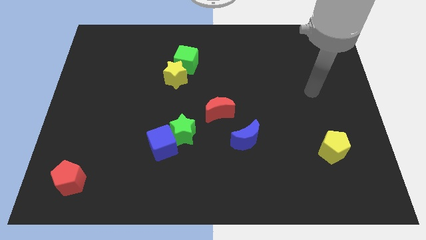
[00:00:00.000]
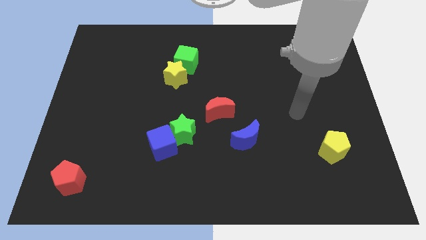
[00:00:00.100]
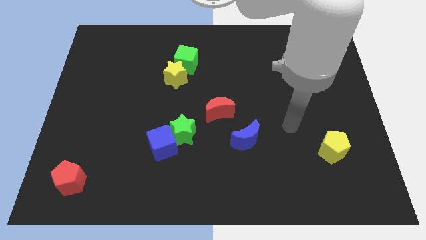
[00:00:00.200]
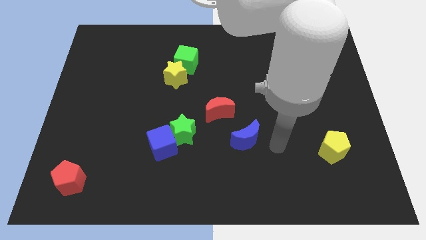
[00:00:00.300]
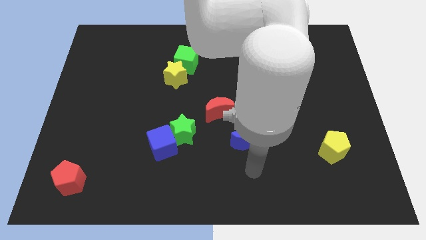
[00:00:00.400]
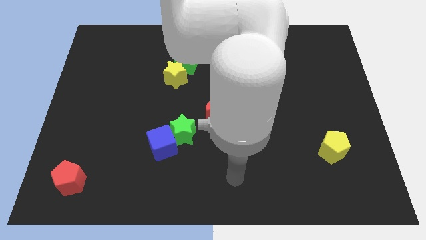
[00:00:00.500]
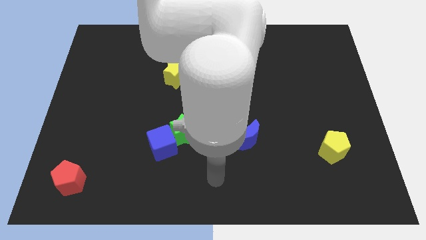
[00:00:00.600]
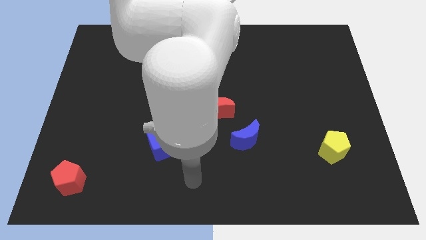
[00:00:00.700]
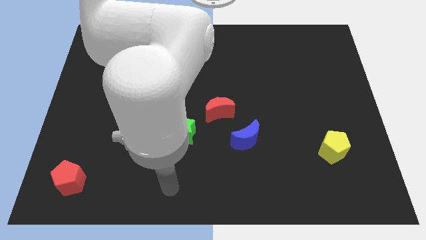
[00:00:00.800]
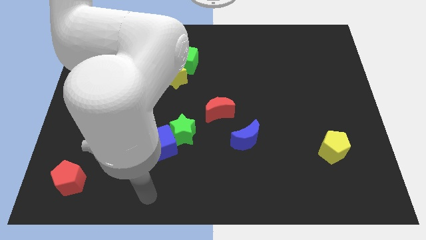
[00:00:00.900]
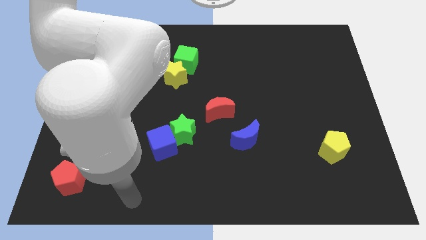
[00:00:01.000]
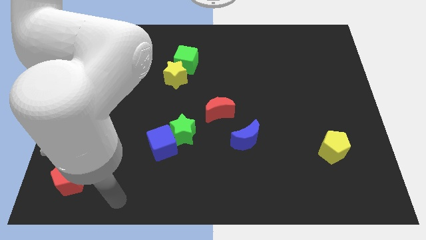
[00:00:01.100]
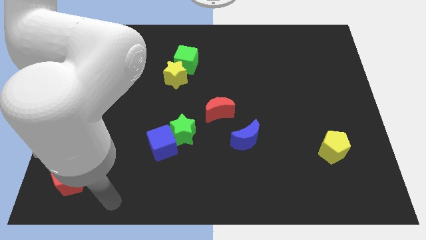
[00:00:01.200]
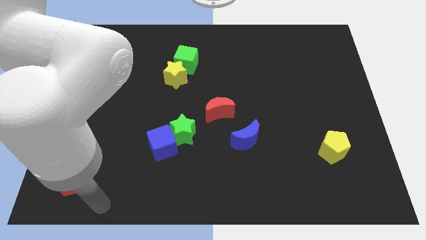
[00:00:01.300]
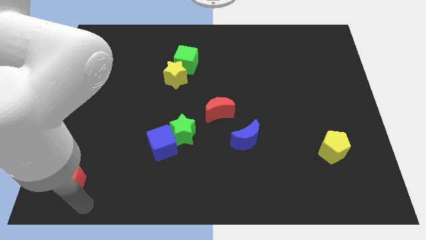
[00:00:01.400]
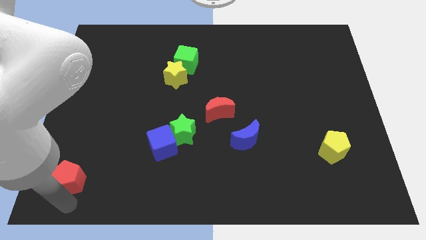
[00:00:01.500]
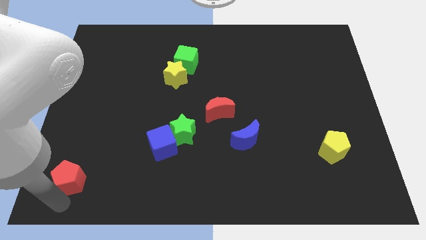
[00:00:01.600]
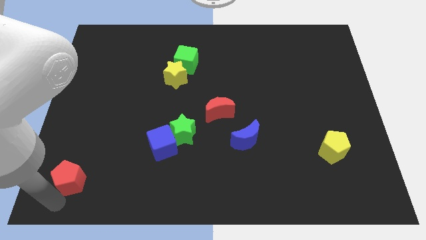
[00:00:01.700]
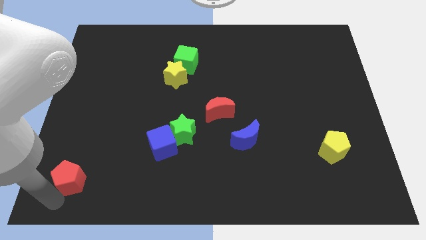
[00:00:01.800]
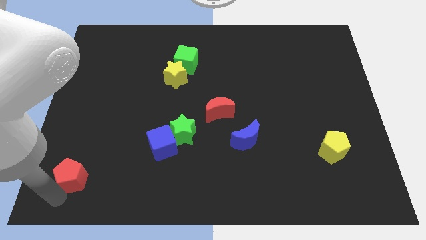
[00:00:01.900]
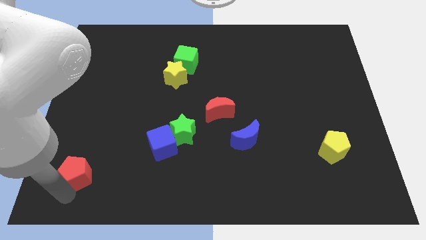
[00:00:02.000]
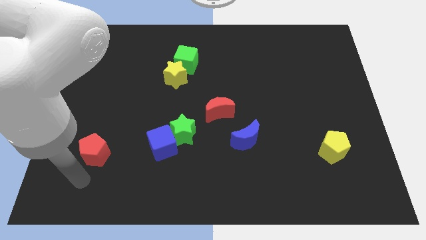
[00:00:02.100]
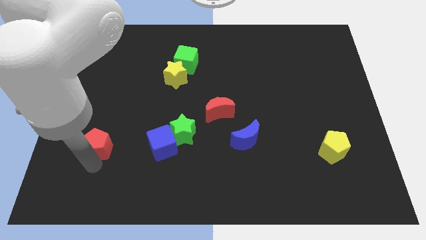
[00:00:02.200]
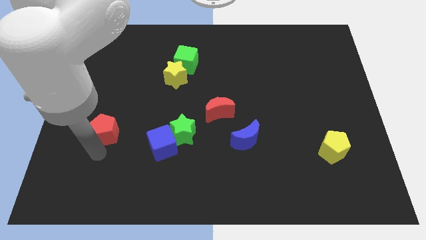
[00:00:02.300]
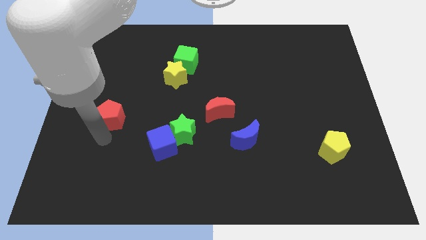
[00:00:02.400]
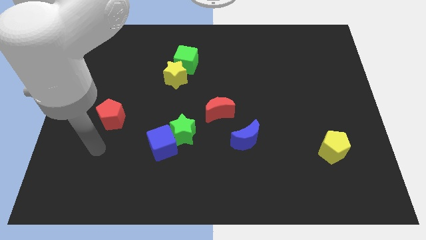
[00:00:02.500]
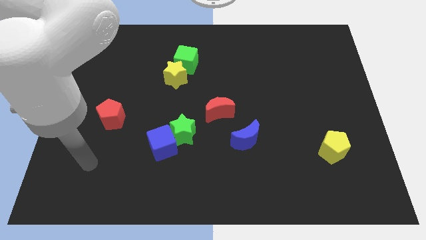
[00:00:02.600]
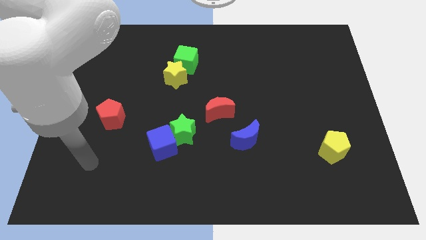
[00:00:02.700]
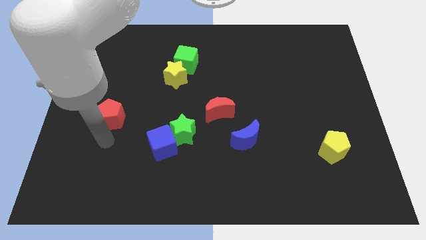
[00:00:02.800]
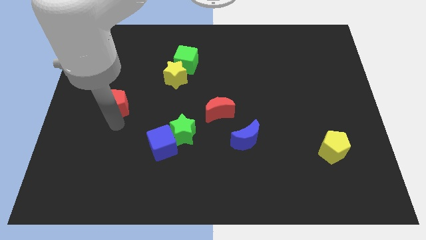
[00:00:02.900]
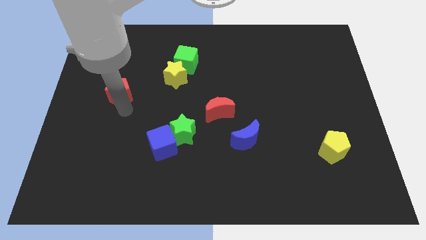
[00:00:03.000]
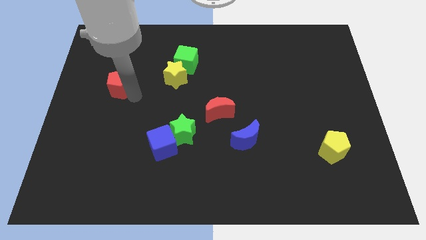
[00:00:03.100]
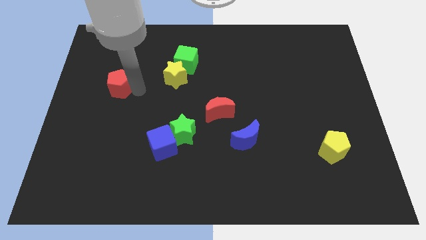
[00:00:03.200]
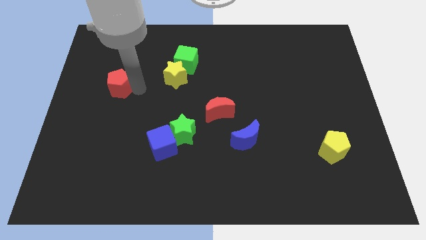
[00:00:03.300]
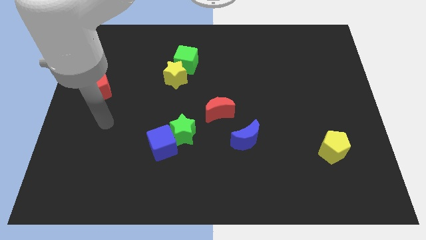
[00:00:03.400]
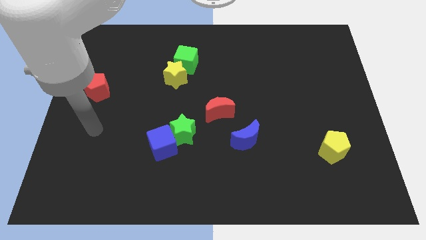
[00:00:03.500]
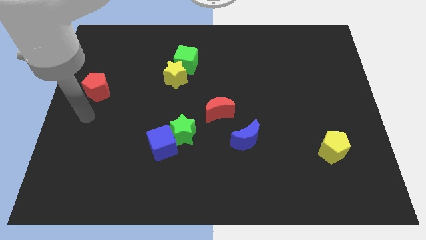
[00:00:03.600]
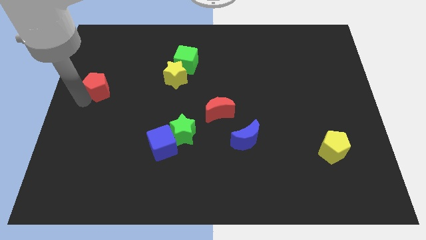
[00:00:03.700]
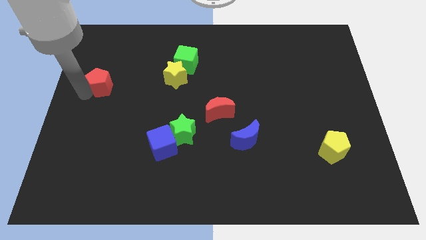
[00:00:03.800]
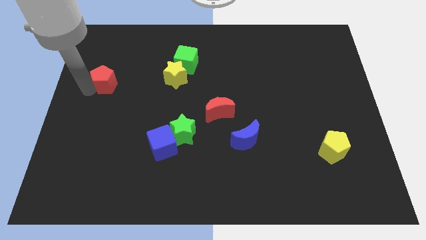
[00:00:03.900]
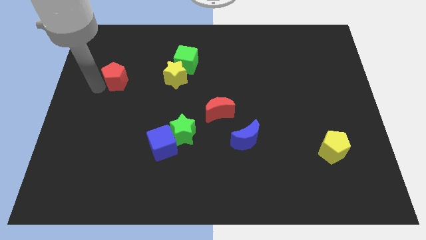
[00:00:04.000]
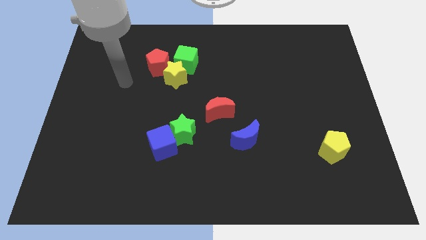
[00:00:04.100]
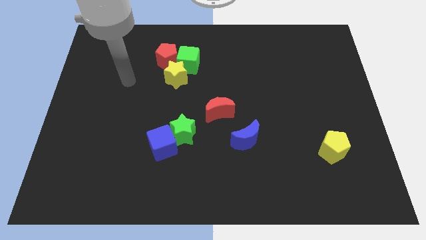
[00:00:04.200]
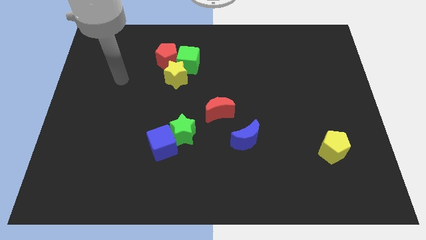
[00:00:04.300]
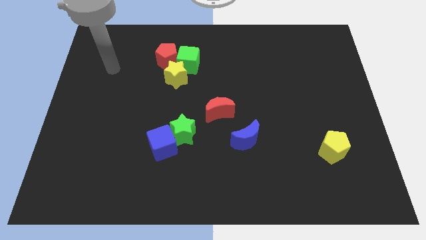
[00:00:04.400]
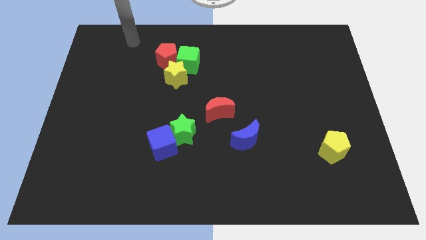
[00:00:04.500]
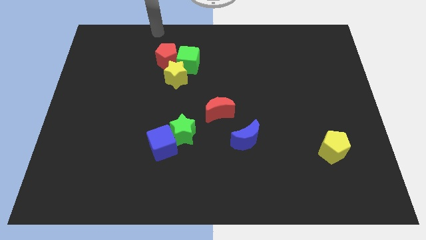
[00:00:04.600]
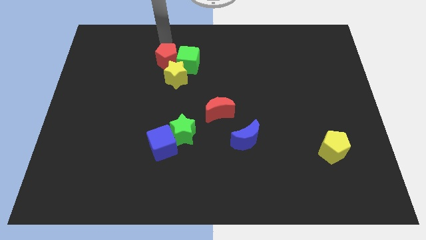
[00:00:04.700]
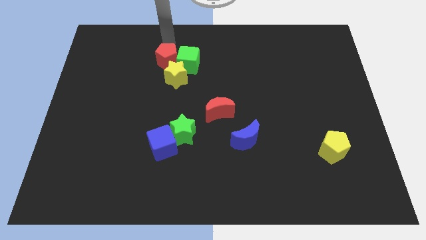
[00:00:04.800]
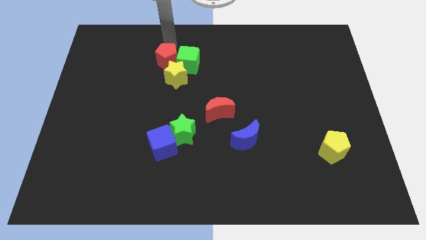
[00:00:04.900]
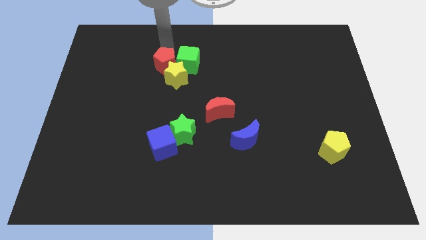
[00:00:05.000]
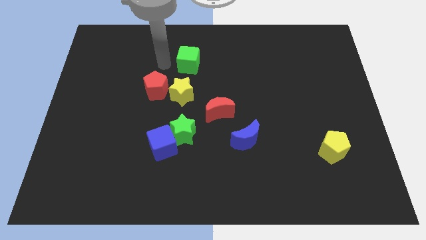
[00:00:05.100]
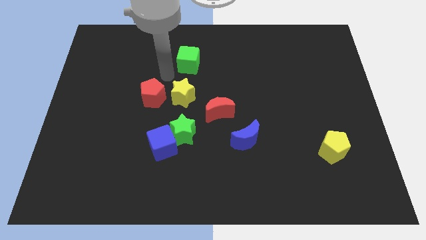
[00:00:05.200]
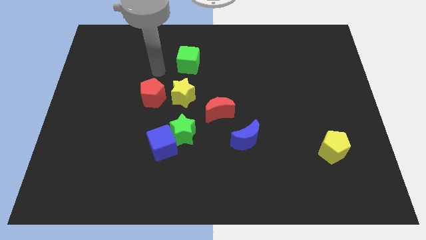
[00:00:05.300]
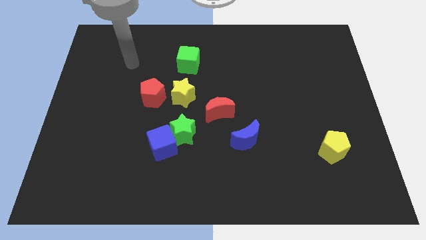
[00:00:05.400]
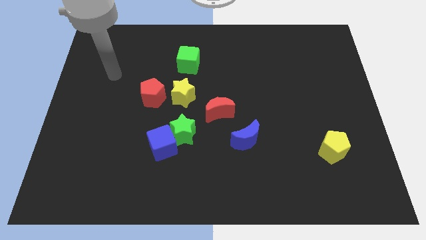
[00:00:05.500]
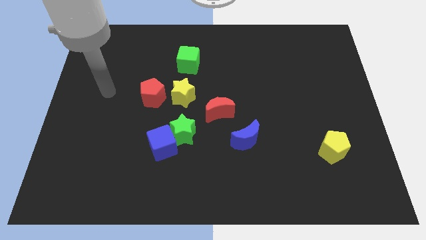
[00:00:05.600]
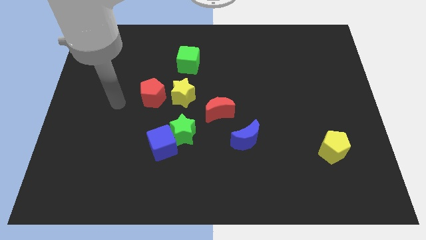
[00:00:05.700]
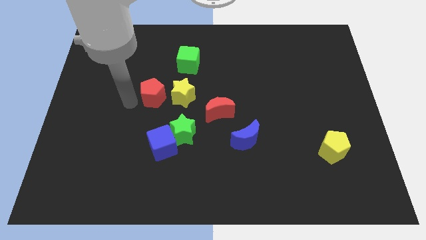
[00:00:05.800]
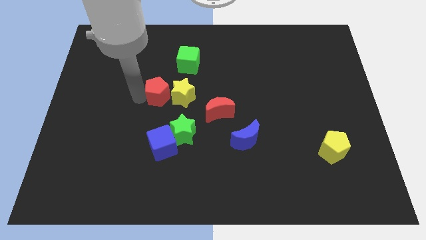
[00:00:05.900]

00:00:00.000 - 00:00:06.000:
move the red pentagon towards the yellow star

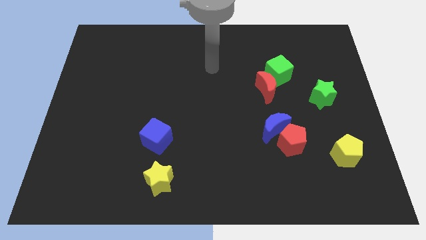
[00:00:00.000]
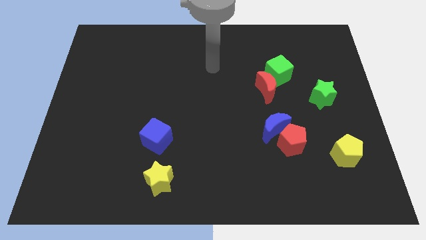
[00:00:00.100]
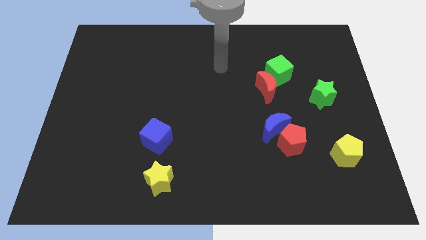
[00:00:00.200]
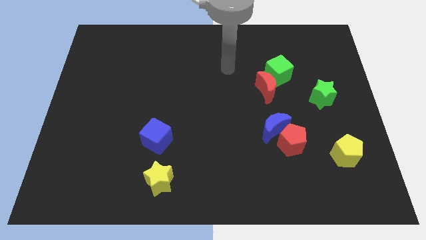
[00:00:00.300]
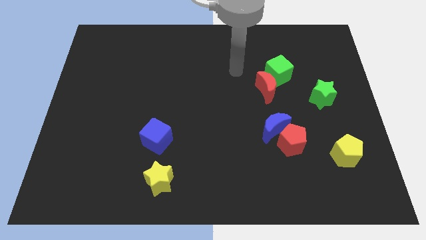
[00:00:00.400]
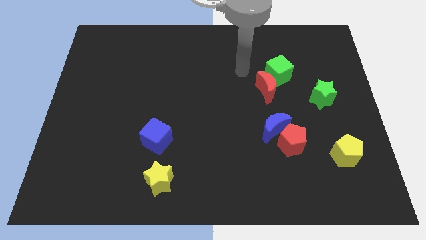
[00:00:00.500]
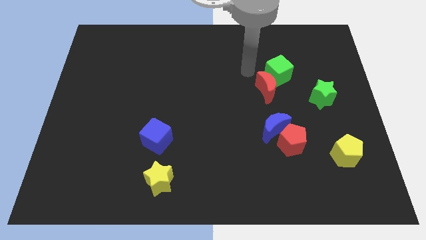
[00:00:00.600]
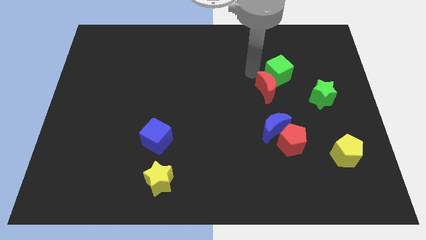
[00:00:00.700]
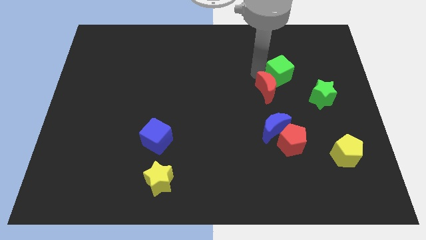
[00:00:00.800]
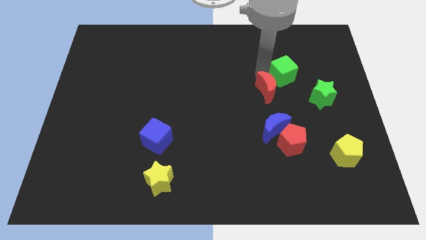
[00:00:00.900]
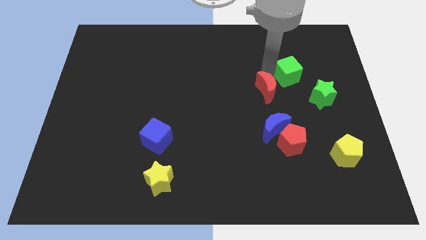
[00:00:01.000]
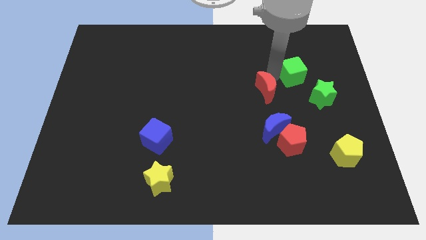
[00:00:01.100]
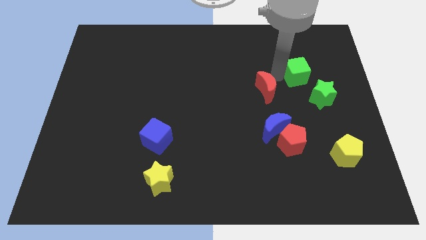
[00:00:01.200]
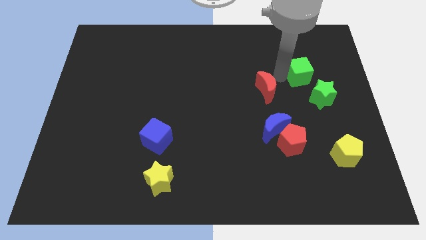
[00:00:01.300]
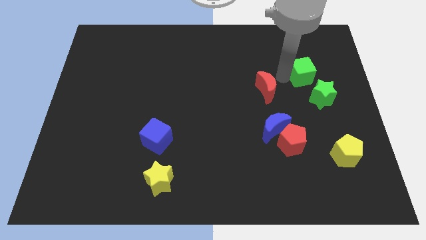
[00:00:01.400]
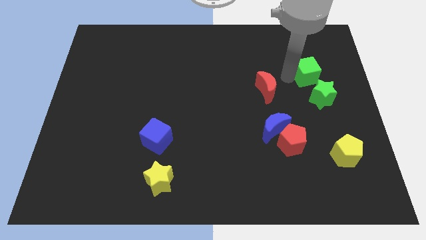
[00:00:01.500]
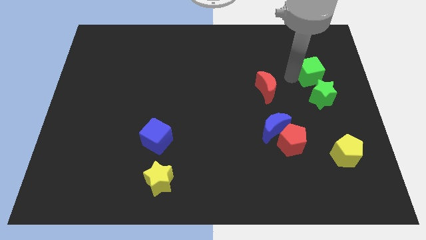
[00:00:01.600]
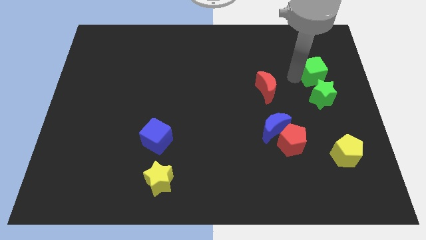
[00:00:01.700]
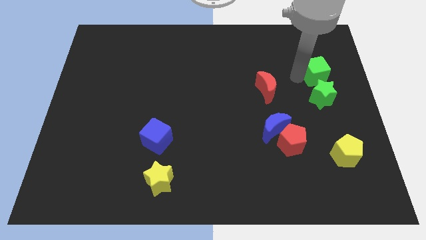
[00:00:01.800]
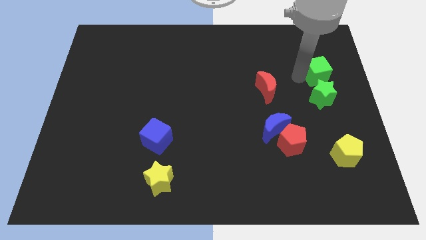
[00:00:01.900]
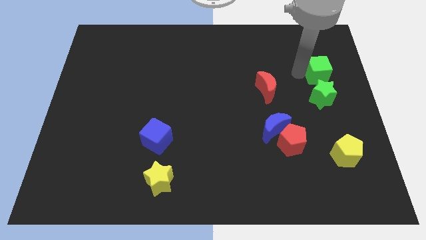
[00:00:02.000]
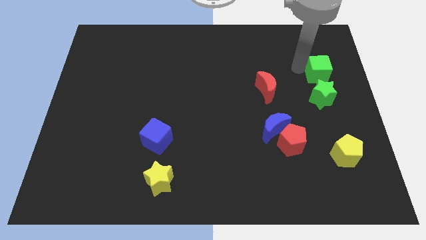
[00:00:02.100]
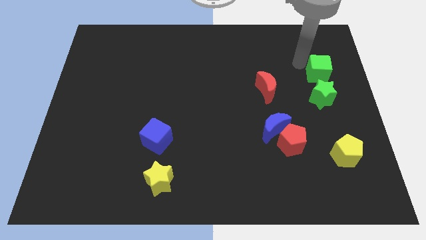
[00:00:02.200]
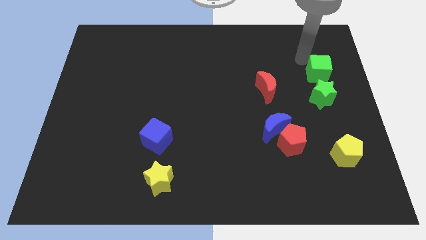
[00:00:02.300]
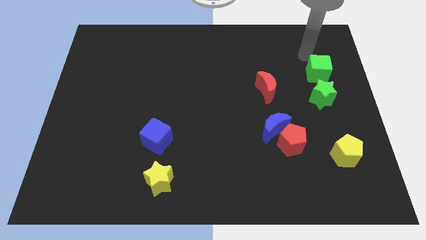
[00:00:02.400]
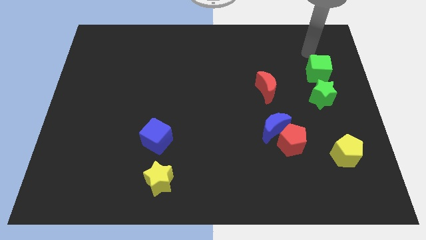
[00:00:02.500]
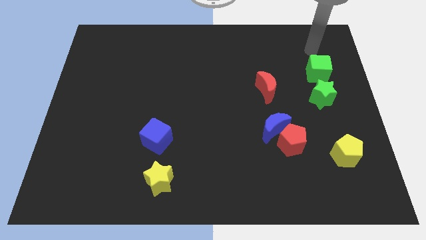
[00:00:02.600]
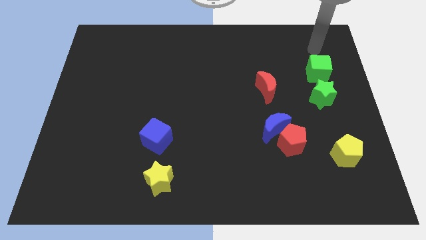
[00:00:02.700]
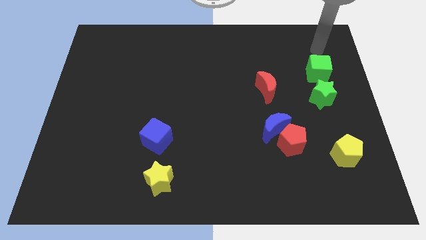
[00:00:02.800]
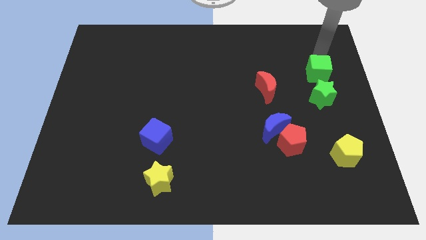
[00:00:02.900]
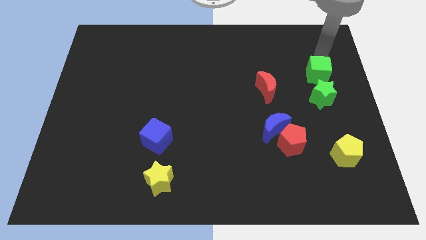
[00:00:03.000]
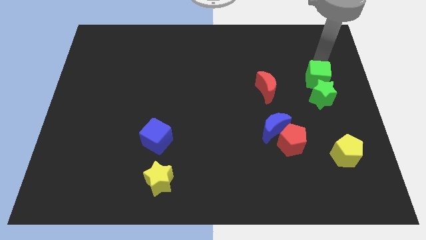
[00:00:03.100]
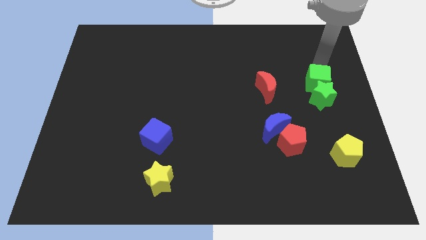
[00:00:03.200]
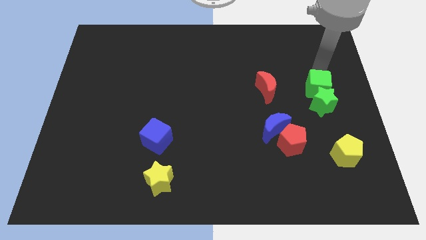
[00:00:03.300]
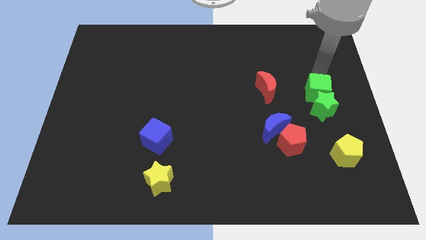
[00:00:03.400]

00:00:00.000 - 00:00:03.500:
put the green cube next to the green star
